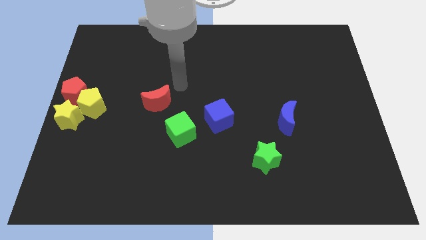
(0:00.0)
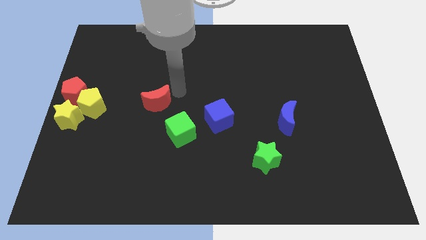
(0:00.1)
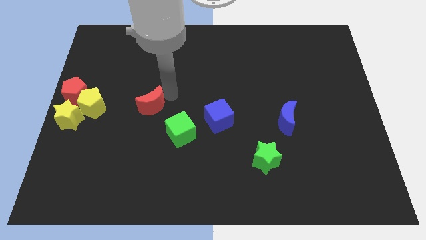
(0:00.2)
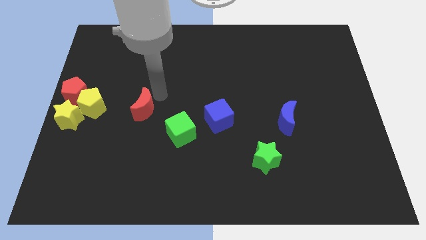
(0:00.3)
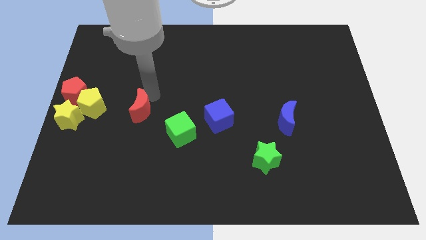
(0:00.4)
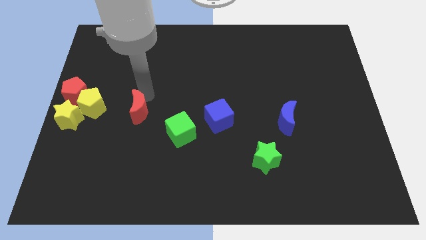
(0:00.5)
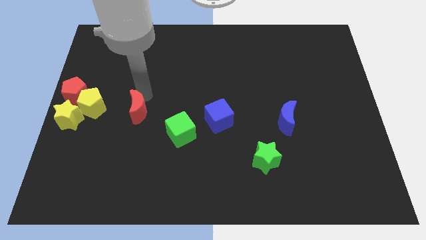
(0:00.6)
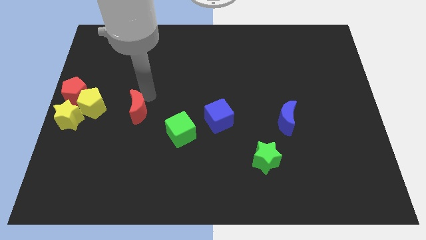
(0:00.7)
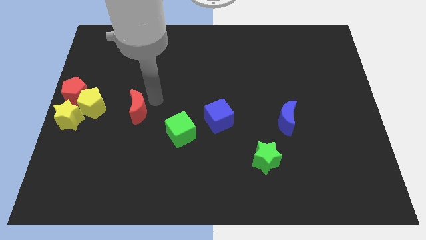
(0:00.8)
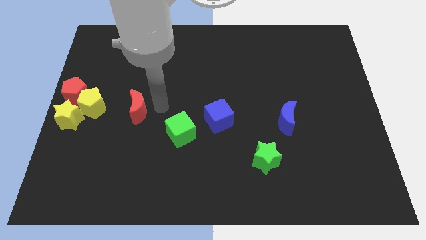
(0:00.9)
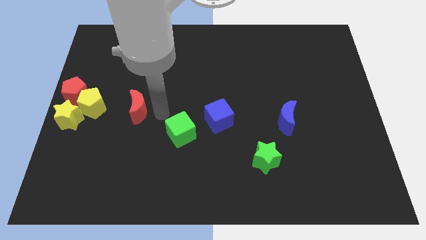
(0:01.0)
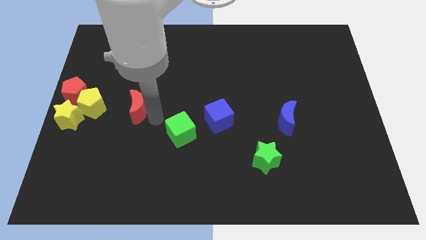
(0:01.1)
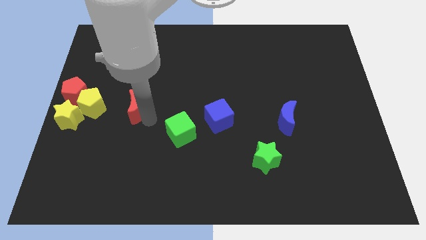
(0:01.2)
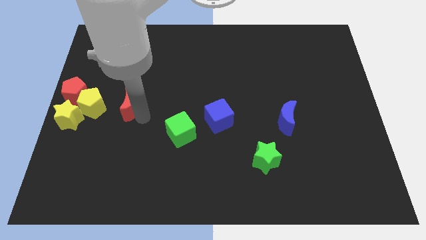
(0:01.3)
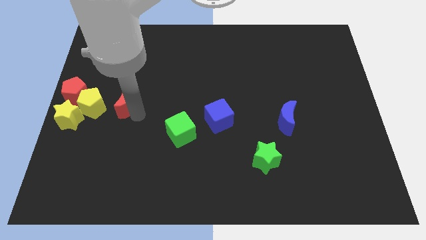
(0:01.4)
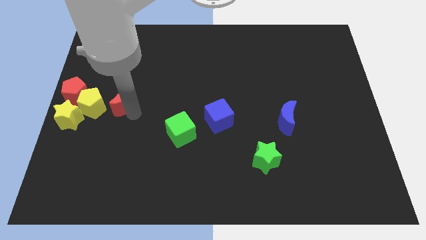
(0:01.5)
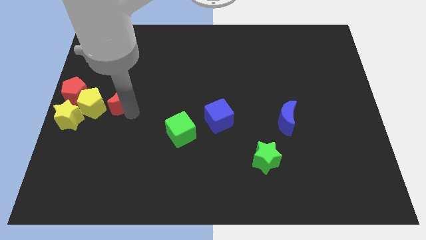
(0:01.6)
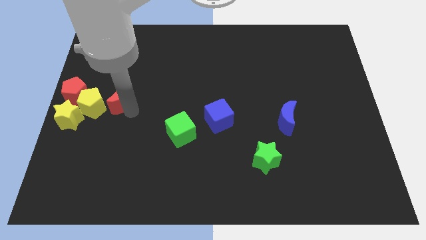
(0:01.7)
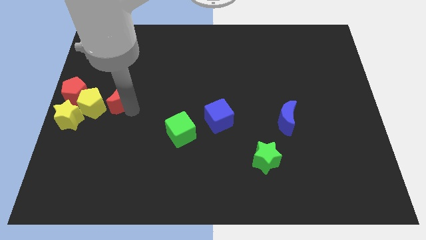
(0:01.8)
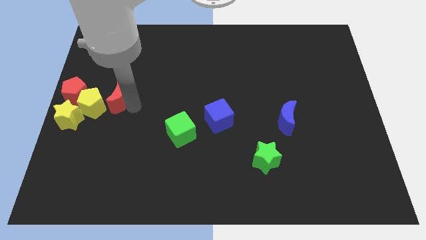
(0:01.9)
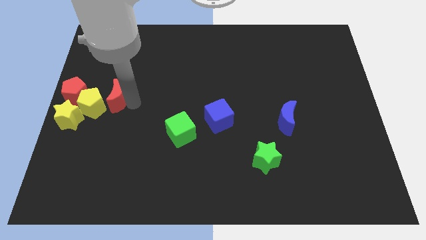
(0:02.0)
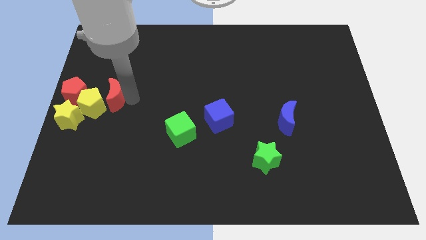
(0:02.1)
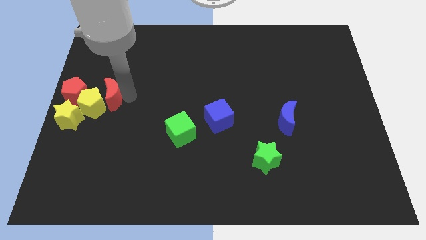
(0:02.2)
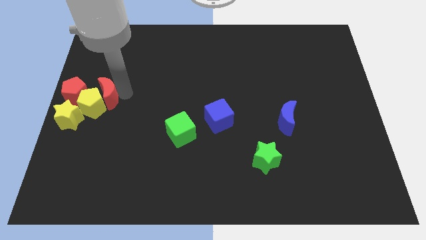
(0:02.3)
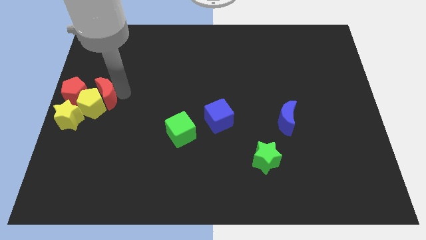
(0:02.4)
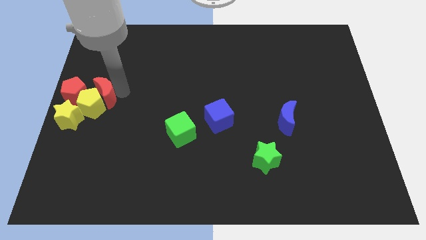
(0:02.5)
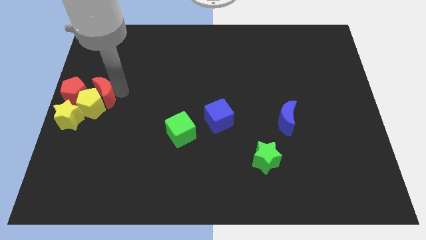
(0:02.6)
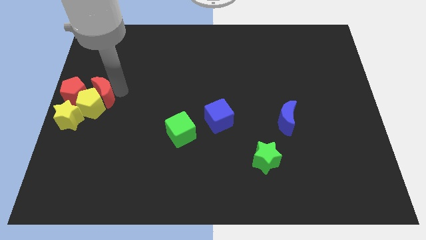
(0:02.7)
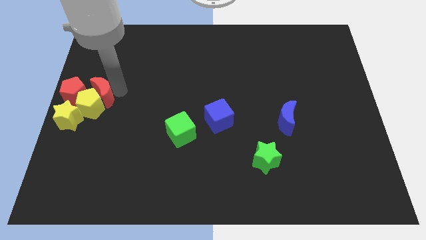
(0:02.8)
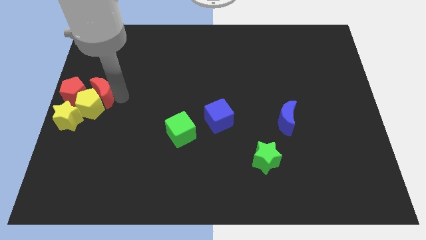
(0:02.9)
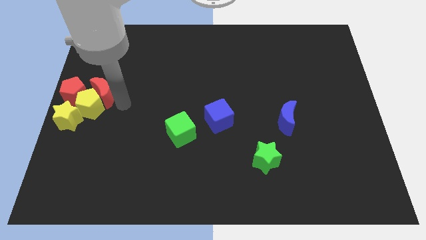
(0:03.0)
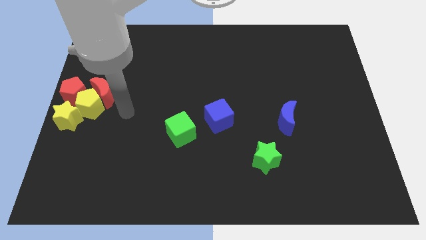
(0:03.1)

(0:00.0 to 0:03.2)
push the red crescent into the group of objects

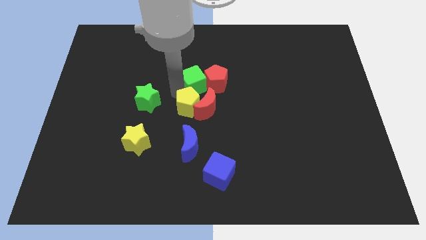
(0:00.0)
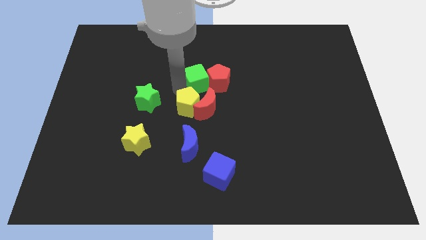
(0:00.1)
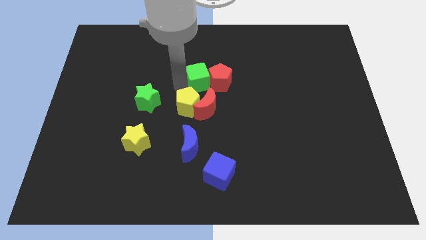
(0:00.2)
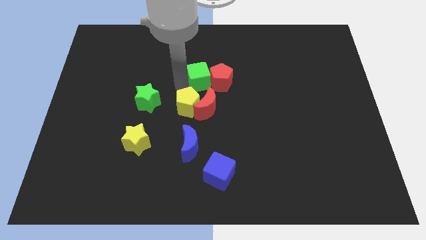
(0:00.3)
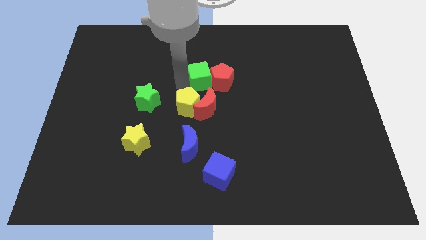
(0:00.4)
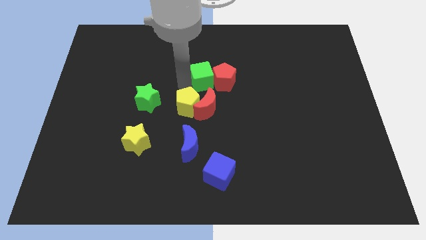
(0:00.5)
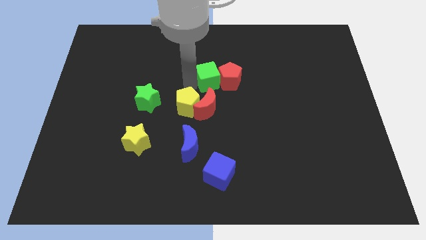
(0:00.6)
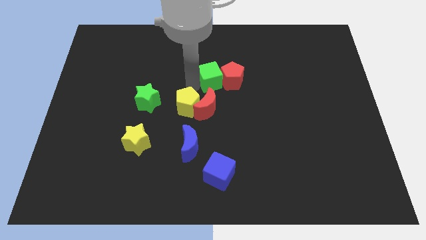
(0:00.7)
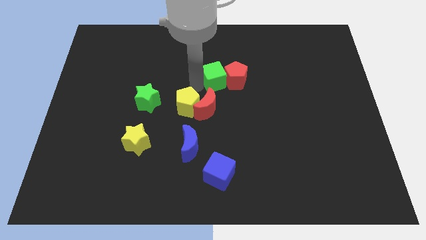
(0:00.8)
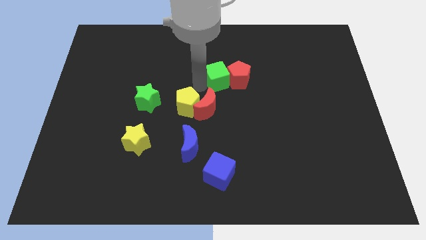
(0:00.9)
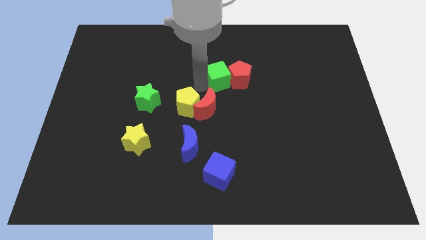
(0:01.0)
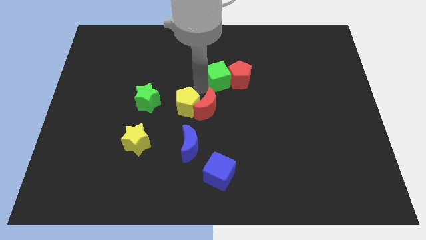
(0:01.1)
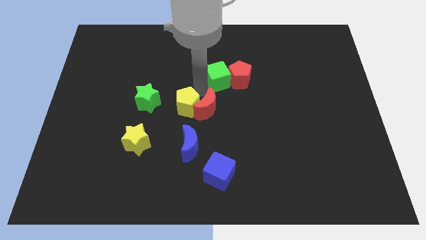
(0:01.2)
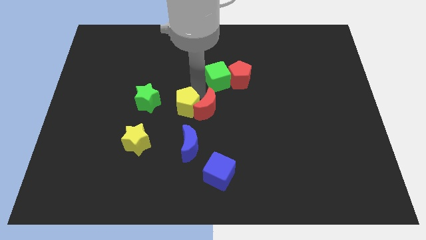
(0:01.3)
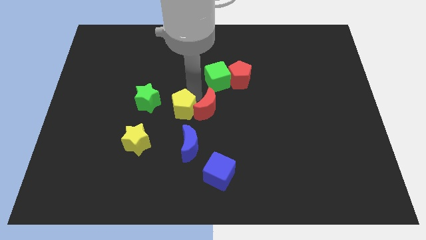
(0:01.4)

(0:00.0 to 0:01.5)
push the green cube and red pentagon towards the top center of the board

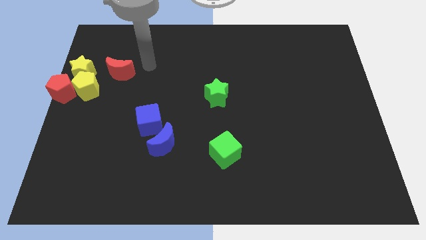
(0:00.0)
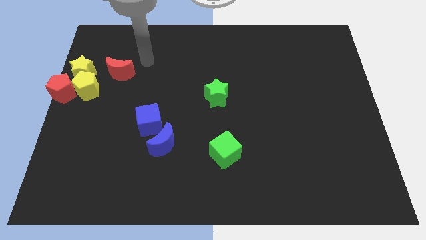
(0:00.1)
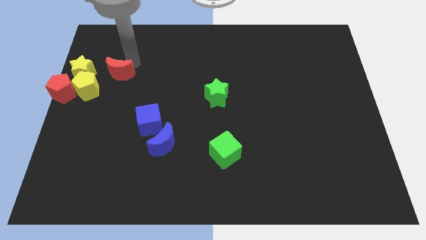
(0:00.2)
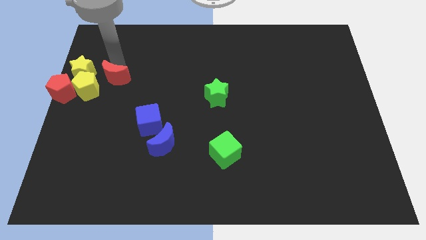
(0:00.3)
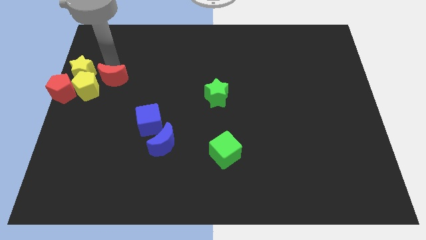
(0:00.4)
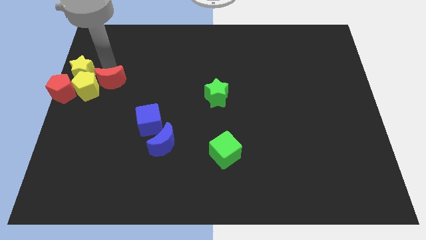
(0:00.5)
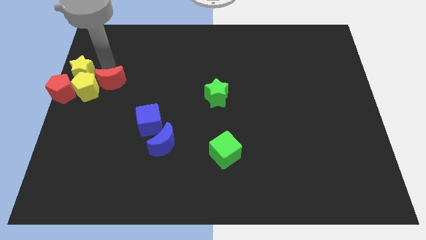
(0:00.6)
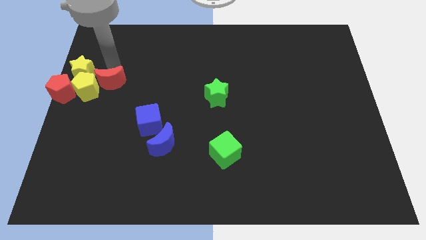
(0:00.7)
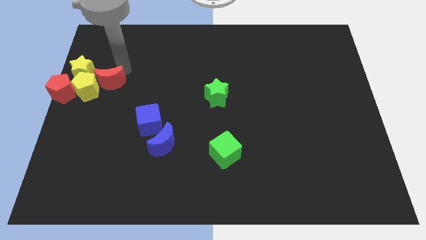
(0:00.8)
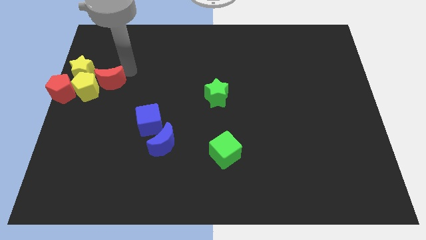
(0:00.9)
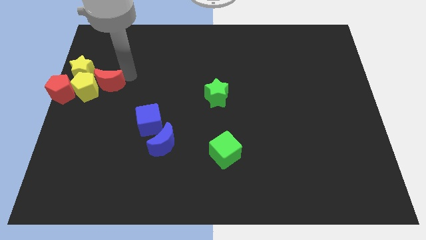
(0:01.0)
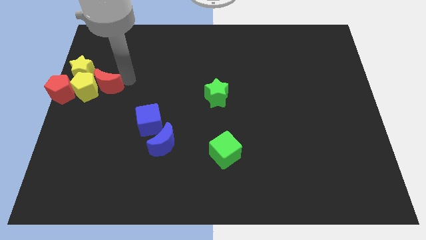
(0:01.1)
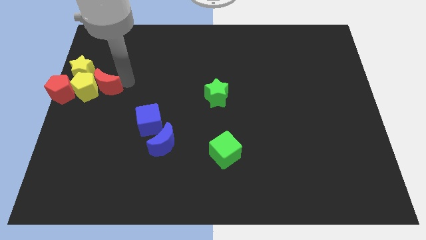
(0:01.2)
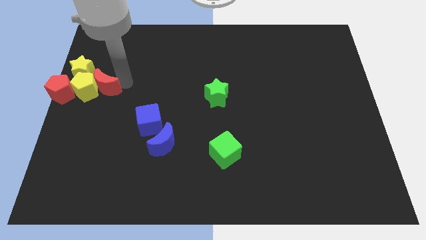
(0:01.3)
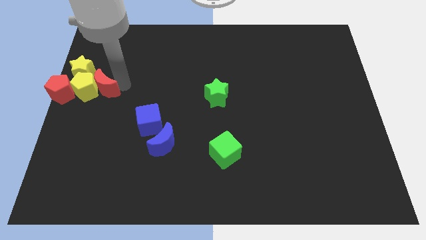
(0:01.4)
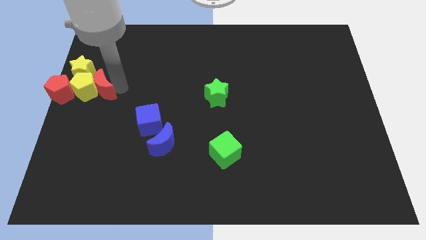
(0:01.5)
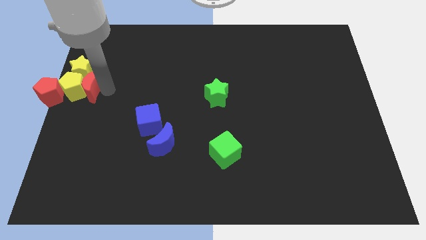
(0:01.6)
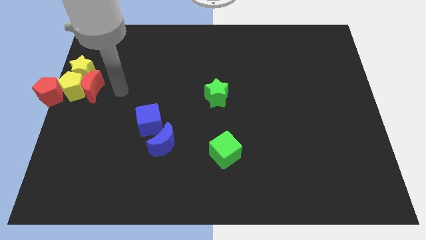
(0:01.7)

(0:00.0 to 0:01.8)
push the red crescent to the right side of the yellow pentagon

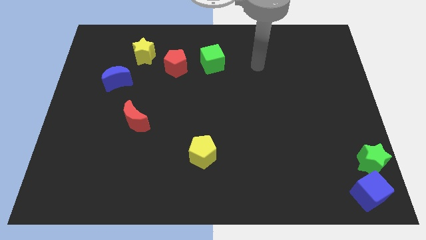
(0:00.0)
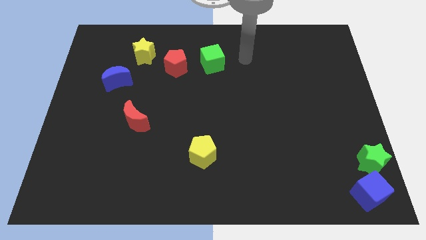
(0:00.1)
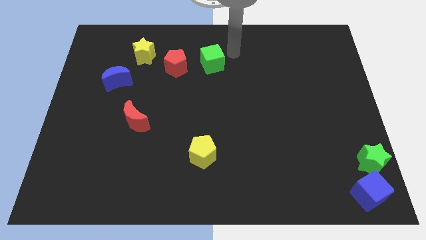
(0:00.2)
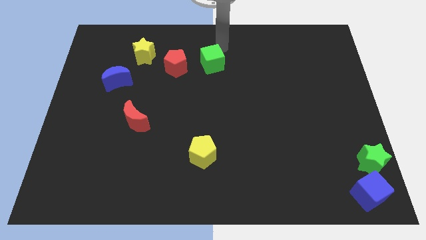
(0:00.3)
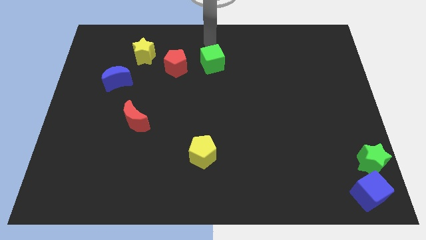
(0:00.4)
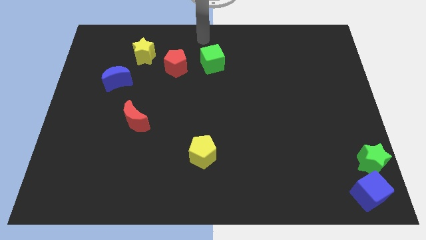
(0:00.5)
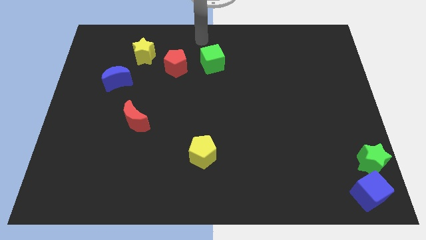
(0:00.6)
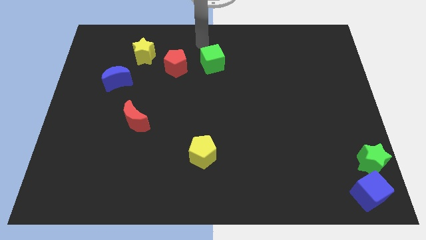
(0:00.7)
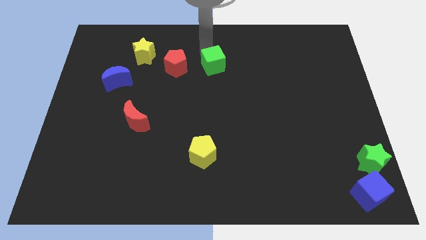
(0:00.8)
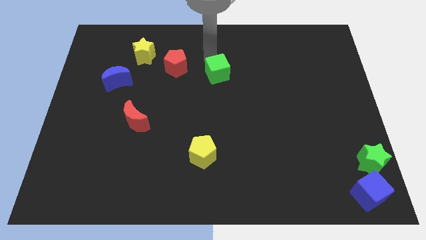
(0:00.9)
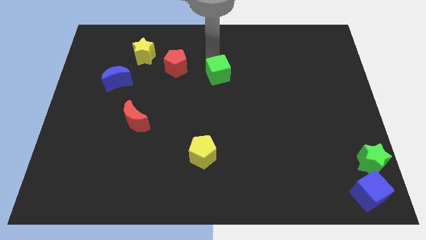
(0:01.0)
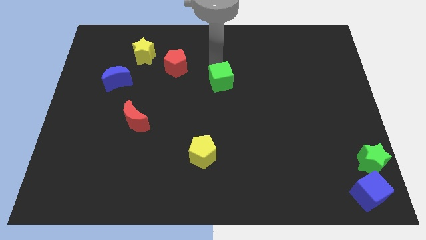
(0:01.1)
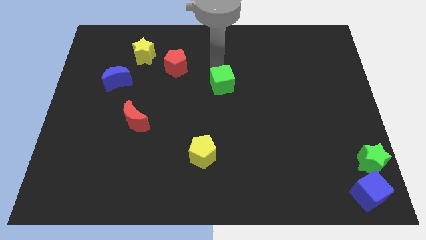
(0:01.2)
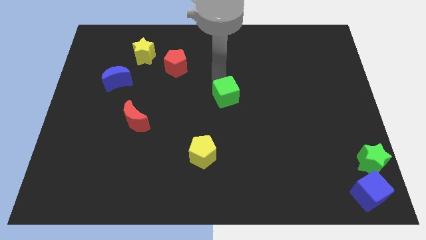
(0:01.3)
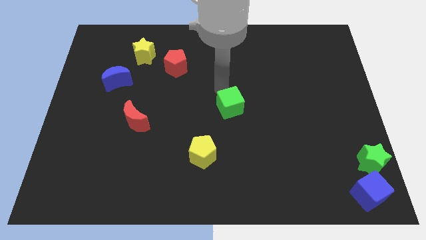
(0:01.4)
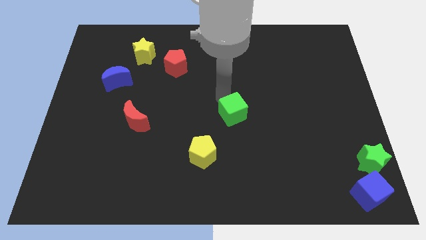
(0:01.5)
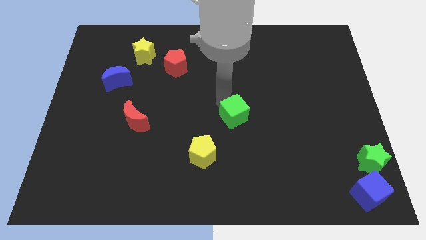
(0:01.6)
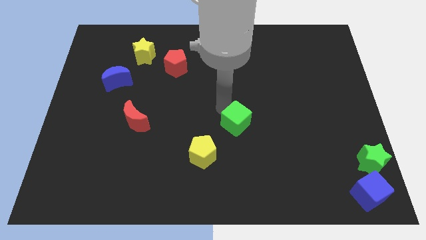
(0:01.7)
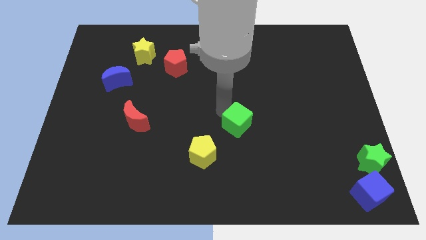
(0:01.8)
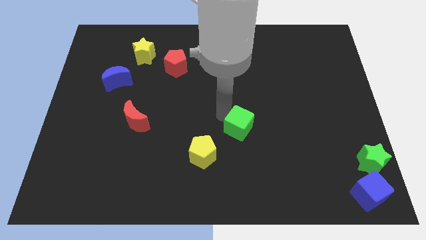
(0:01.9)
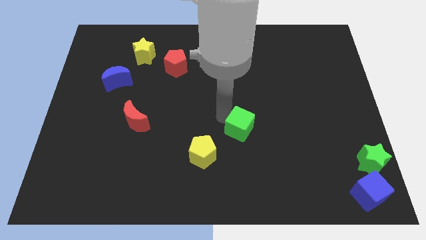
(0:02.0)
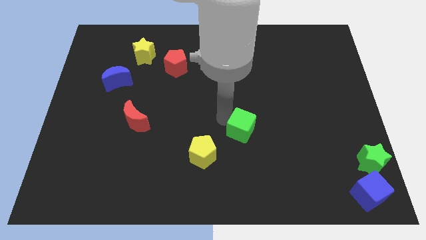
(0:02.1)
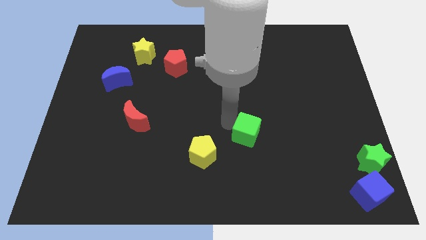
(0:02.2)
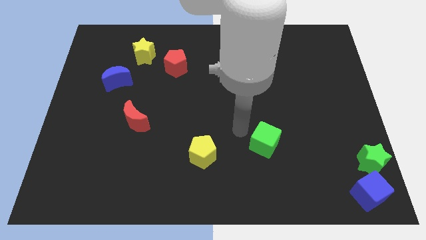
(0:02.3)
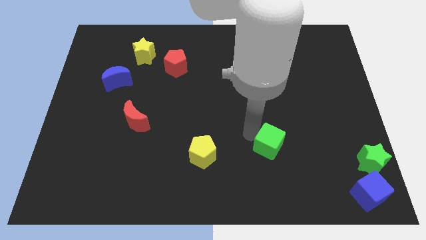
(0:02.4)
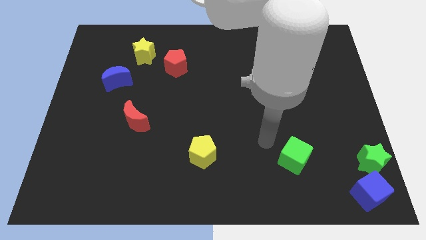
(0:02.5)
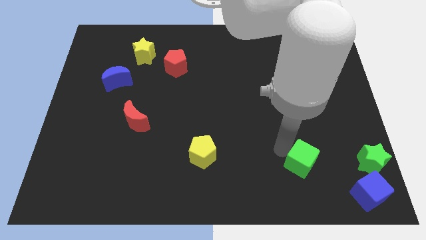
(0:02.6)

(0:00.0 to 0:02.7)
place the green cube in between green star and yellow pentagon
